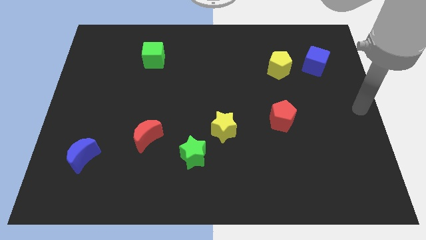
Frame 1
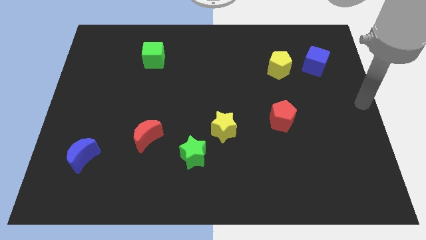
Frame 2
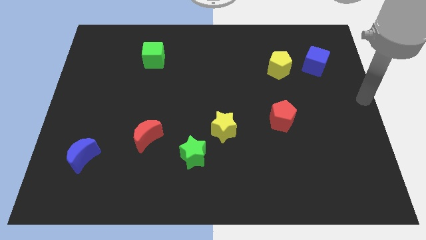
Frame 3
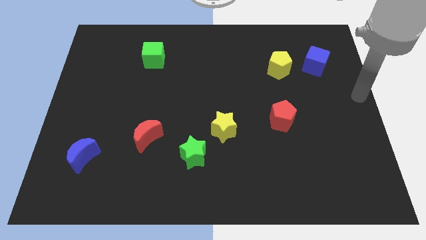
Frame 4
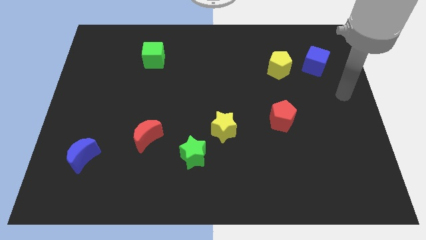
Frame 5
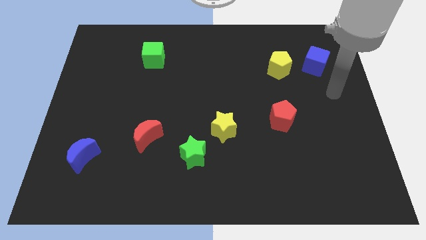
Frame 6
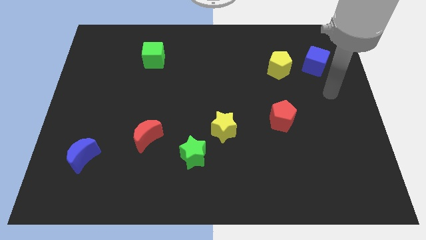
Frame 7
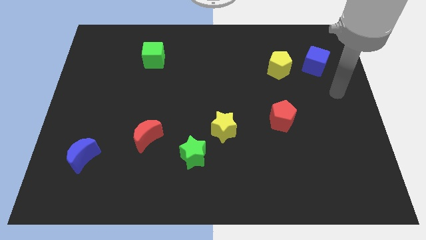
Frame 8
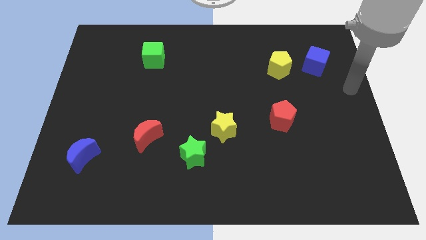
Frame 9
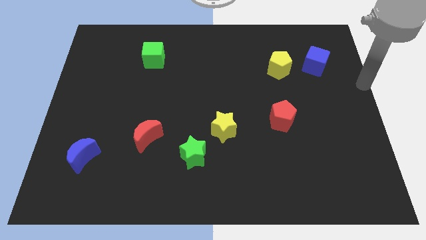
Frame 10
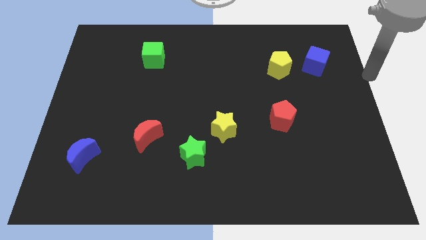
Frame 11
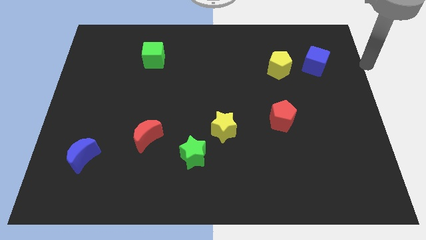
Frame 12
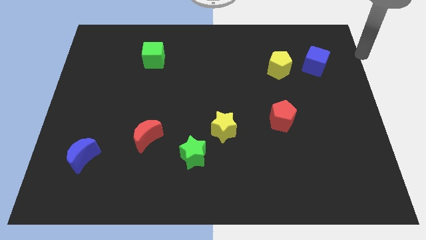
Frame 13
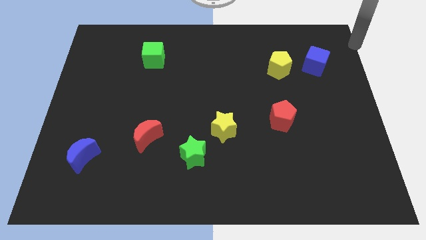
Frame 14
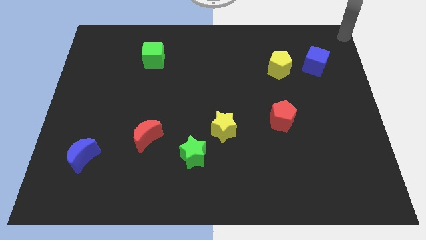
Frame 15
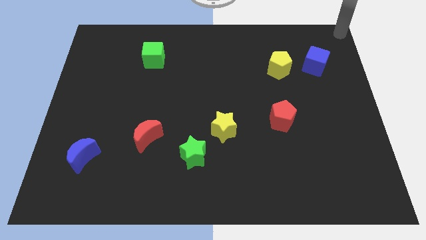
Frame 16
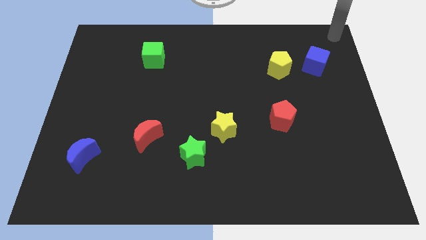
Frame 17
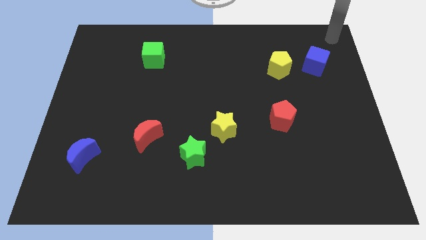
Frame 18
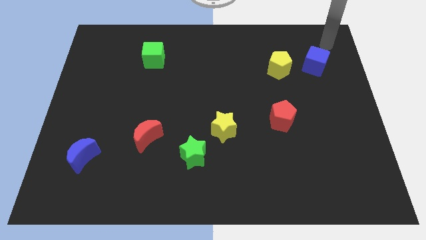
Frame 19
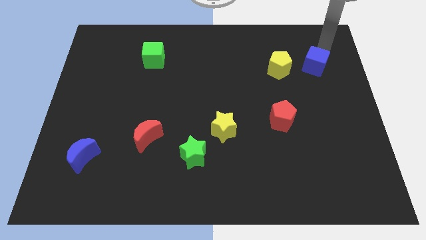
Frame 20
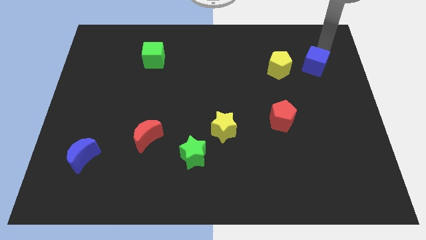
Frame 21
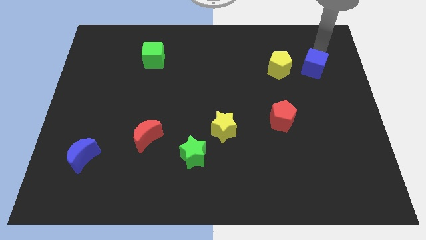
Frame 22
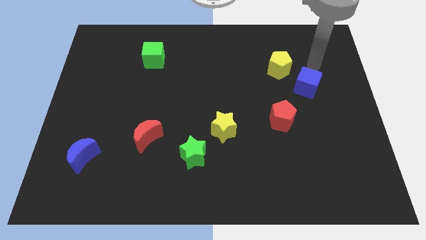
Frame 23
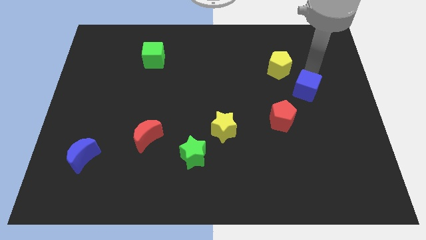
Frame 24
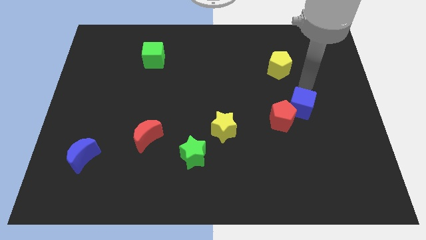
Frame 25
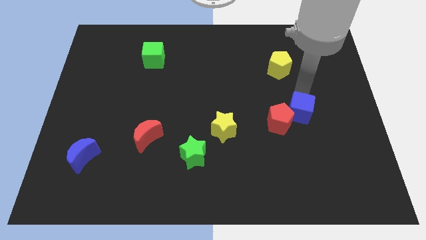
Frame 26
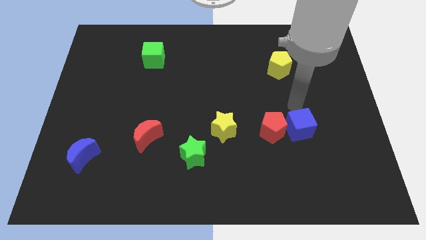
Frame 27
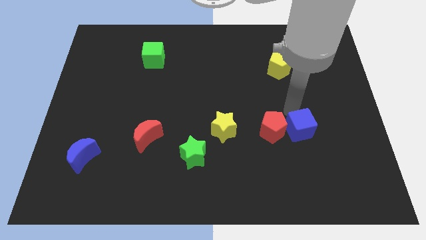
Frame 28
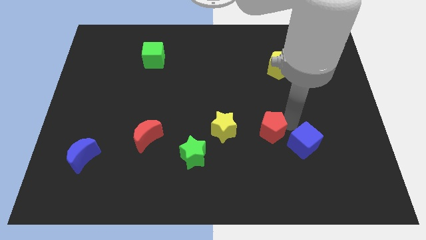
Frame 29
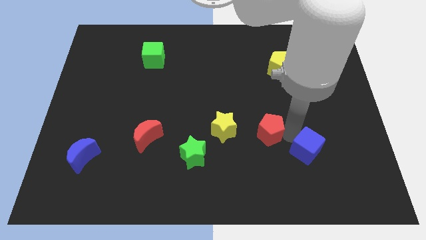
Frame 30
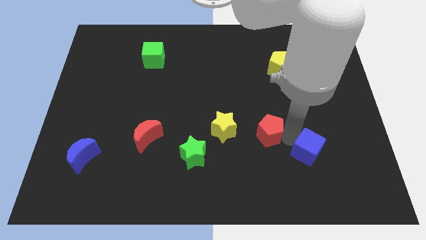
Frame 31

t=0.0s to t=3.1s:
push the blue cube to the right of the red pentagon

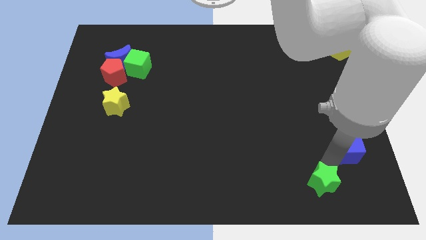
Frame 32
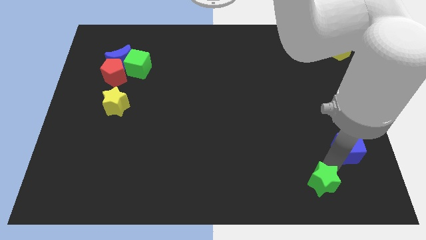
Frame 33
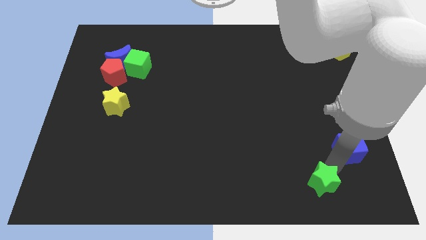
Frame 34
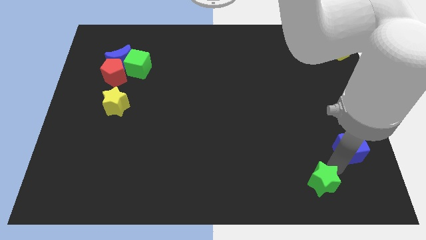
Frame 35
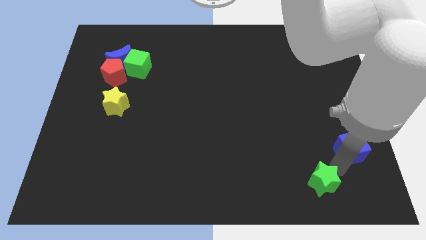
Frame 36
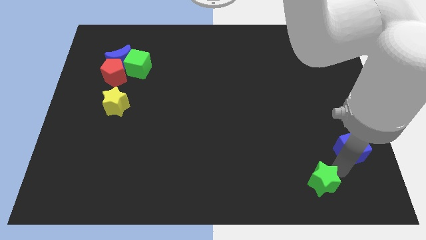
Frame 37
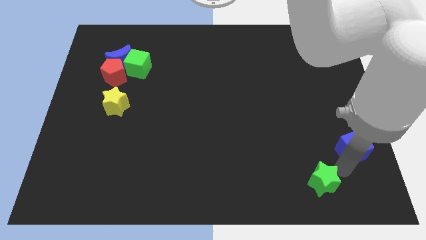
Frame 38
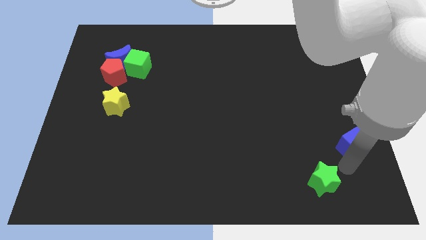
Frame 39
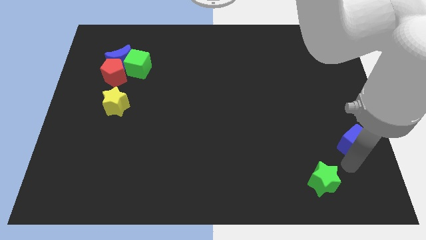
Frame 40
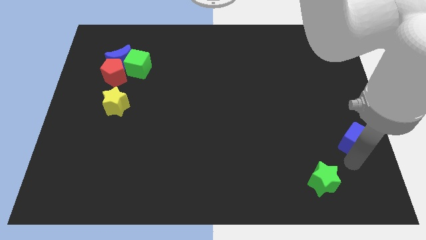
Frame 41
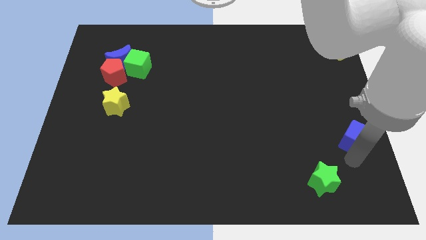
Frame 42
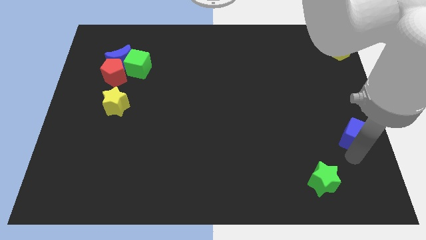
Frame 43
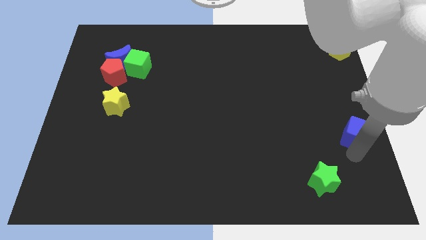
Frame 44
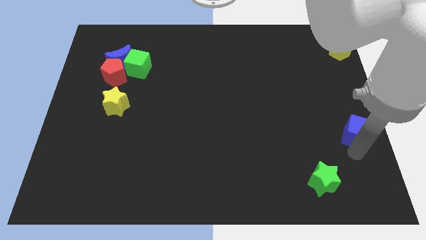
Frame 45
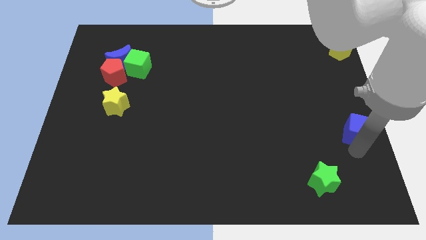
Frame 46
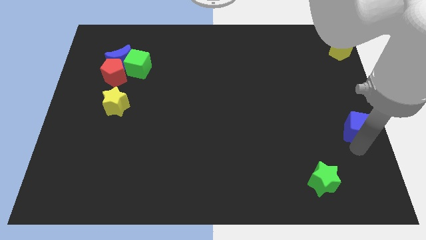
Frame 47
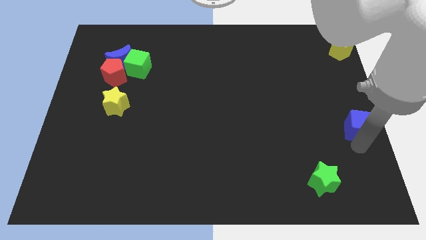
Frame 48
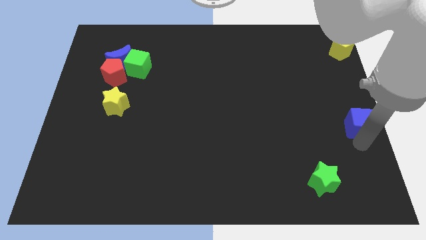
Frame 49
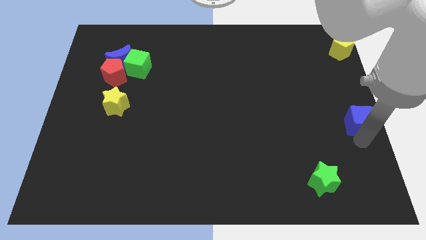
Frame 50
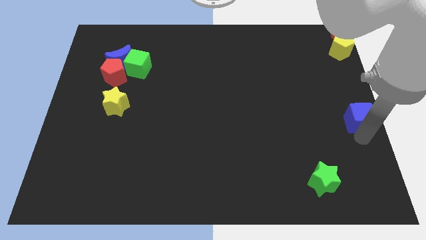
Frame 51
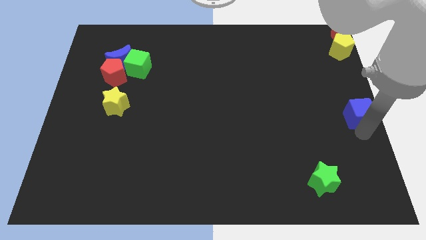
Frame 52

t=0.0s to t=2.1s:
push the blue cube to the center right

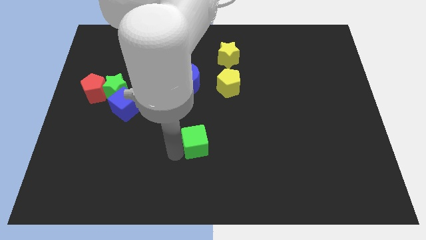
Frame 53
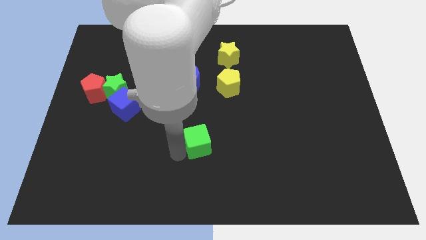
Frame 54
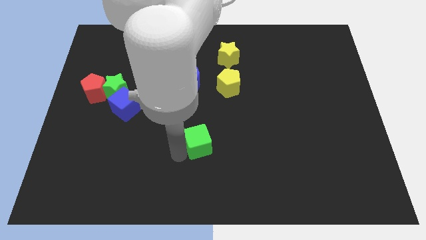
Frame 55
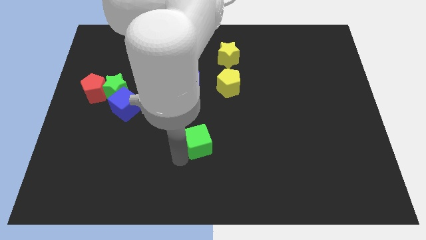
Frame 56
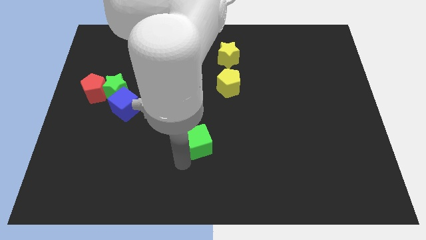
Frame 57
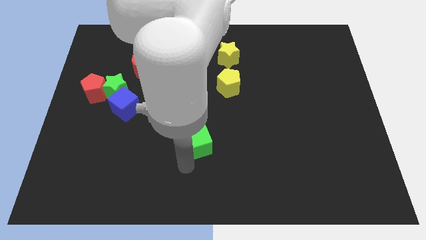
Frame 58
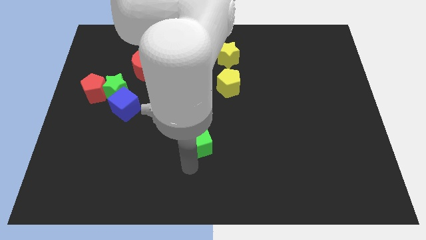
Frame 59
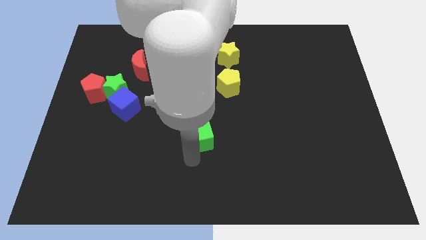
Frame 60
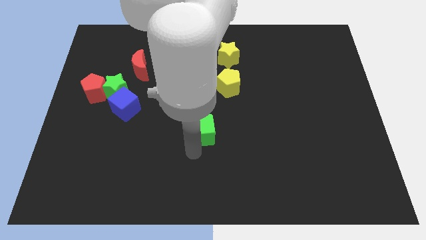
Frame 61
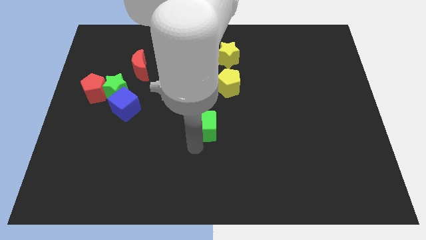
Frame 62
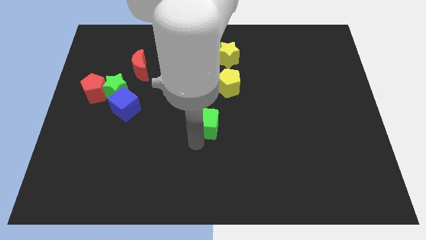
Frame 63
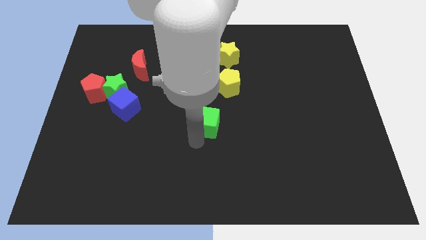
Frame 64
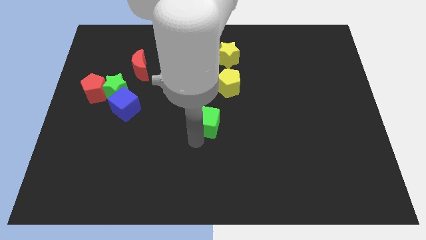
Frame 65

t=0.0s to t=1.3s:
push green cube slightly towards up

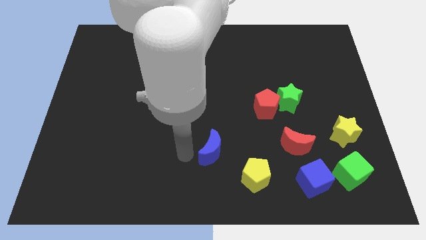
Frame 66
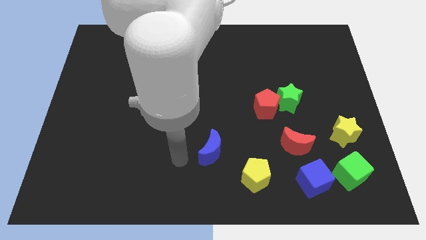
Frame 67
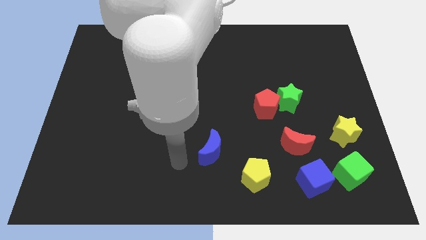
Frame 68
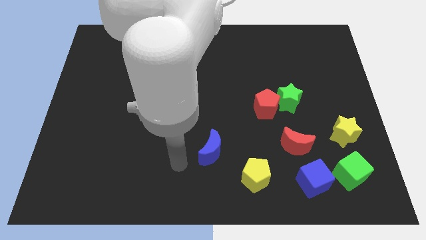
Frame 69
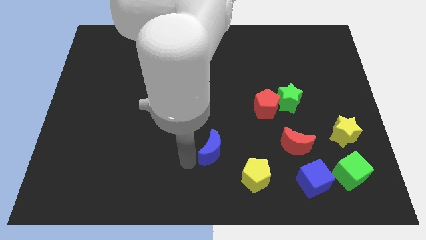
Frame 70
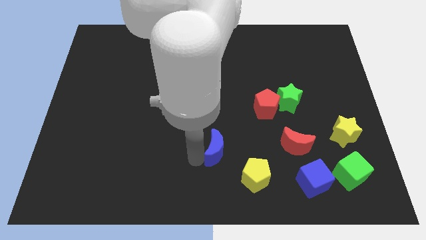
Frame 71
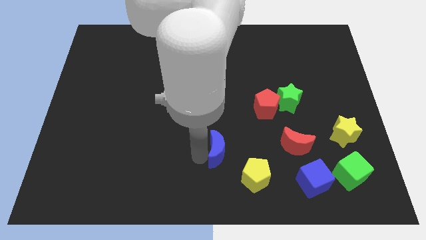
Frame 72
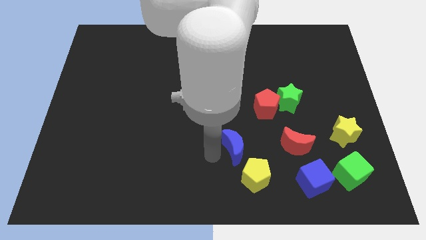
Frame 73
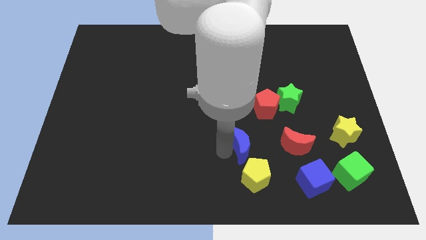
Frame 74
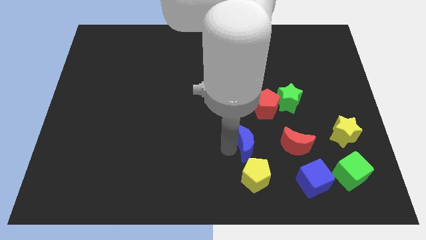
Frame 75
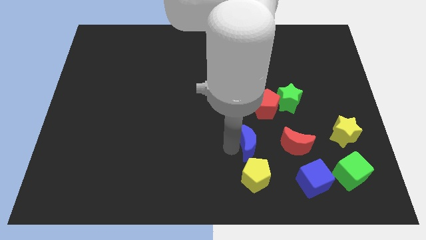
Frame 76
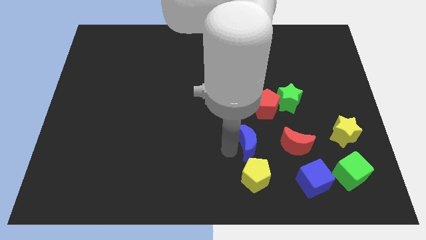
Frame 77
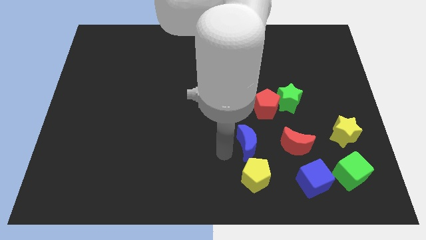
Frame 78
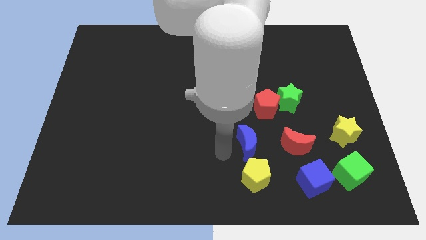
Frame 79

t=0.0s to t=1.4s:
push the blue crescent to the top of the yellow pentagon

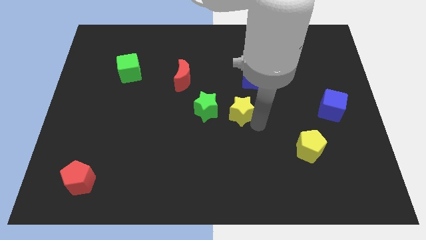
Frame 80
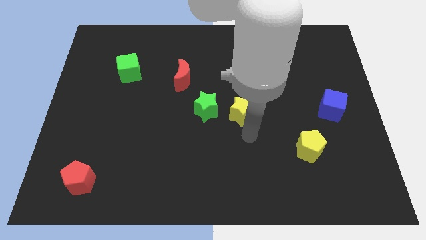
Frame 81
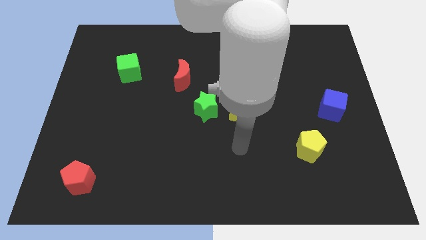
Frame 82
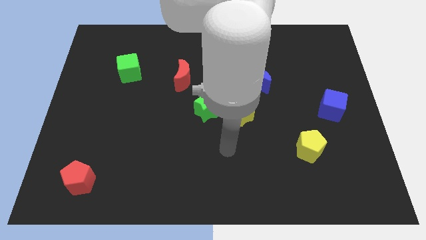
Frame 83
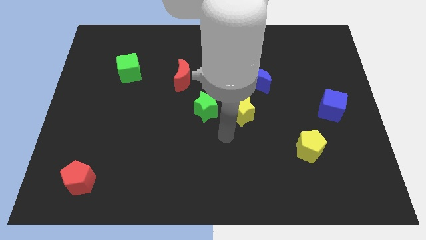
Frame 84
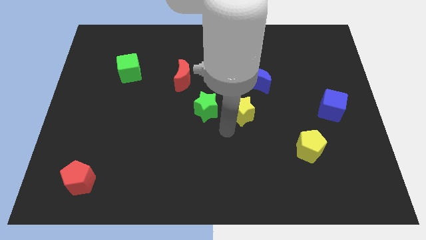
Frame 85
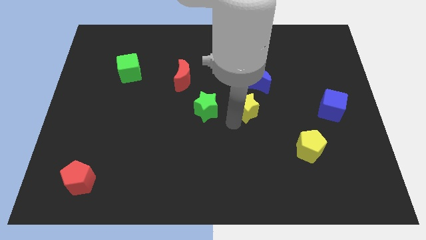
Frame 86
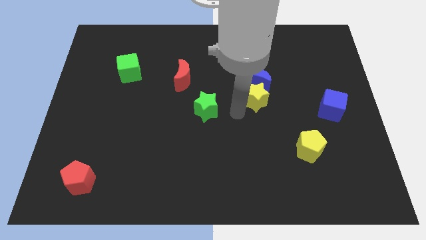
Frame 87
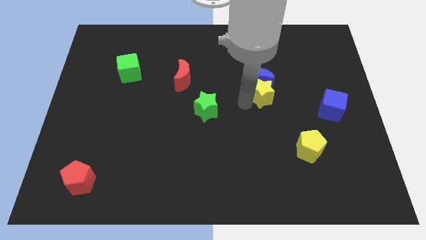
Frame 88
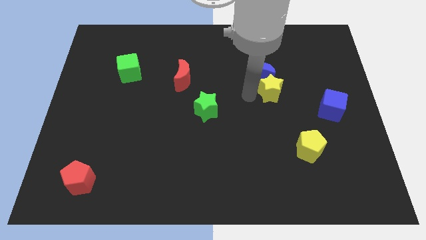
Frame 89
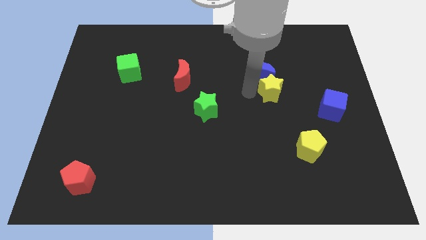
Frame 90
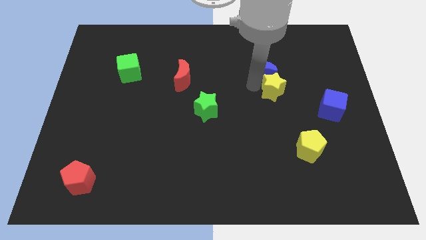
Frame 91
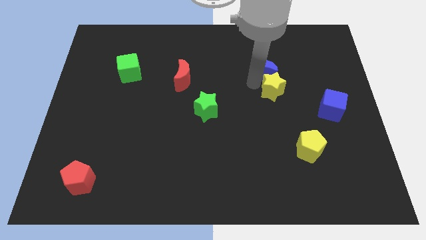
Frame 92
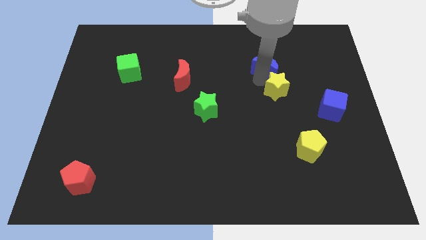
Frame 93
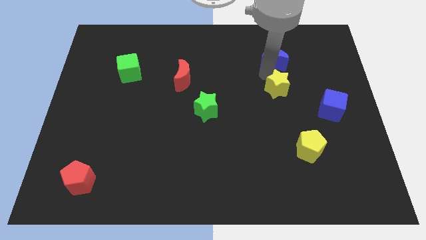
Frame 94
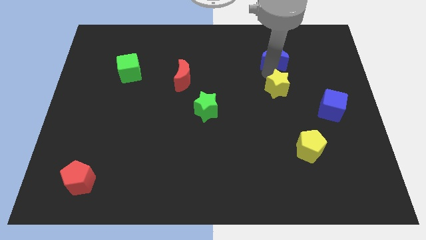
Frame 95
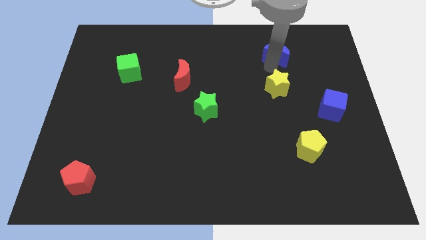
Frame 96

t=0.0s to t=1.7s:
push the yellow star along with the blue moon upwards
